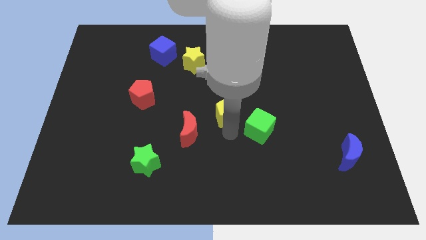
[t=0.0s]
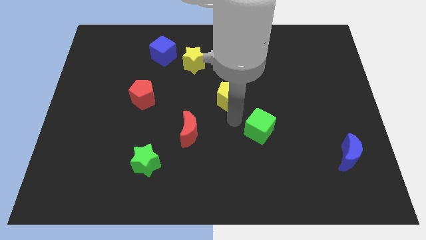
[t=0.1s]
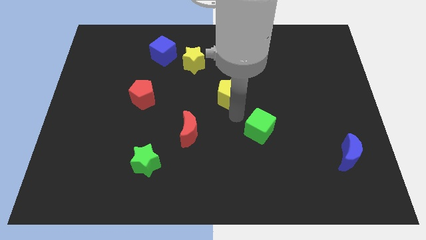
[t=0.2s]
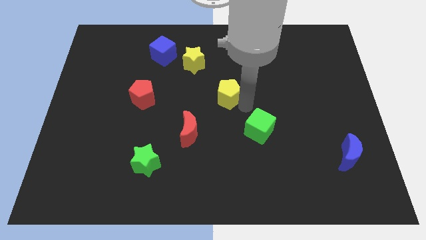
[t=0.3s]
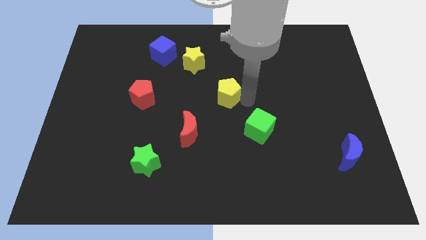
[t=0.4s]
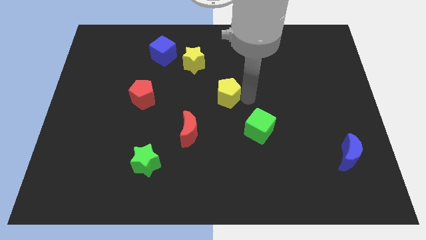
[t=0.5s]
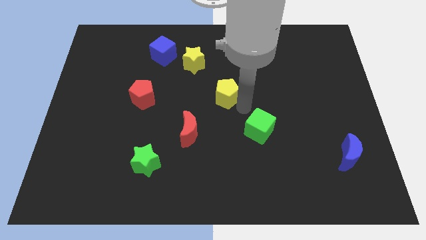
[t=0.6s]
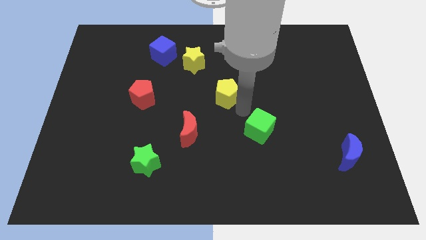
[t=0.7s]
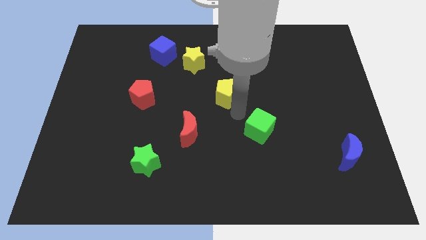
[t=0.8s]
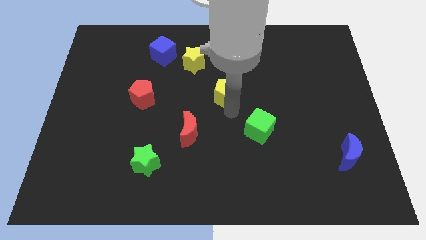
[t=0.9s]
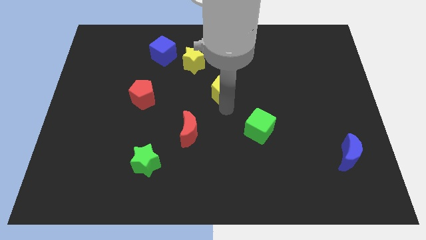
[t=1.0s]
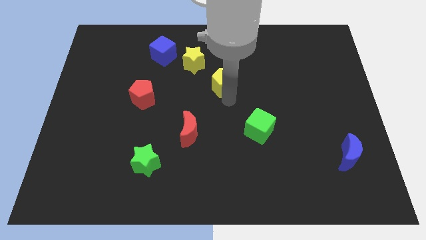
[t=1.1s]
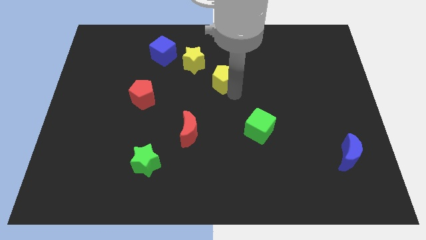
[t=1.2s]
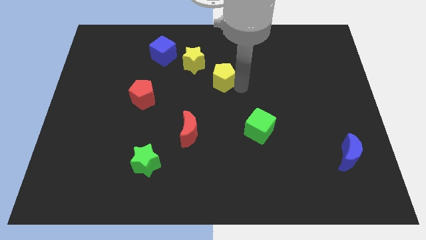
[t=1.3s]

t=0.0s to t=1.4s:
push yellow pentagon slightly upwards

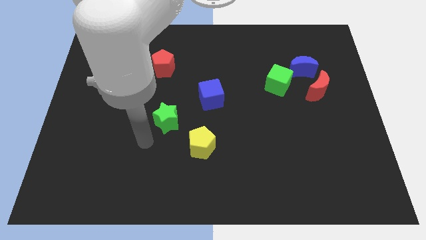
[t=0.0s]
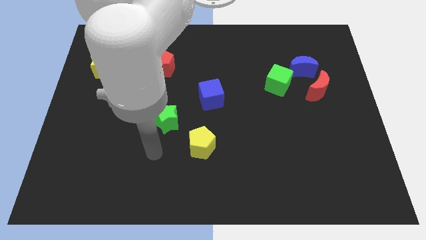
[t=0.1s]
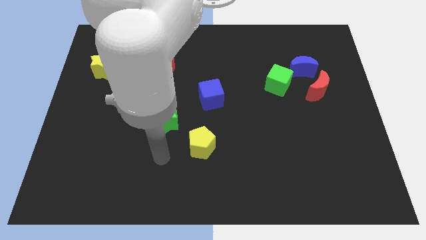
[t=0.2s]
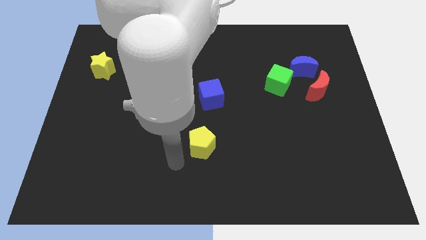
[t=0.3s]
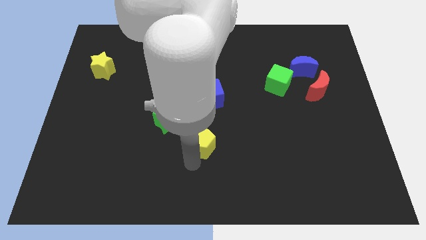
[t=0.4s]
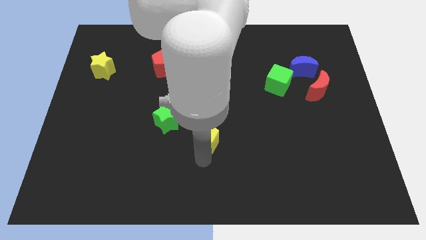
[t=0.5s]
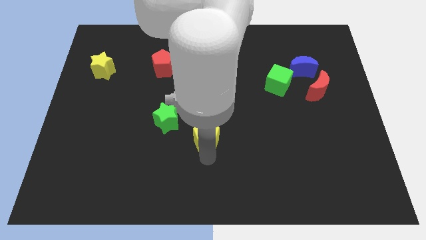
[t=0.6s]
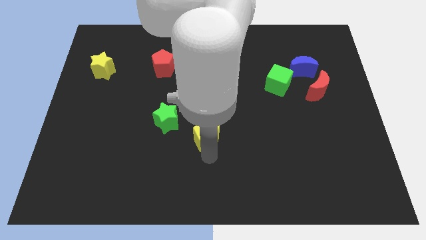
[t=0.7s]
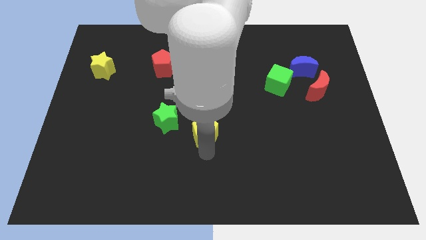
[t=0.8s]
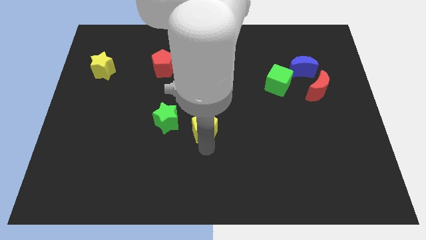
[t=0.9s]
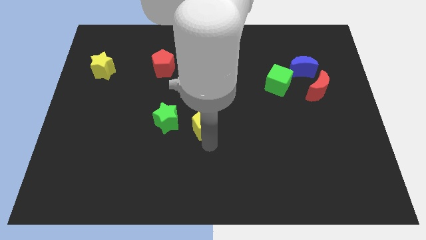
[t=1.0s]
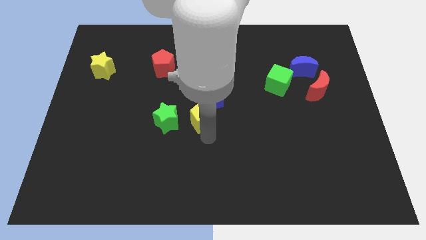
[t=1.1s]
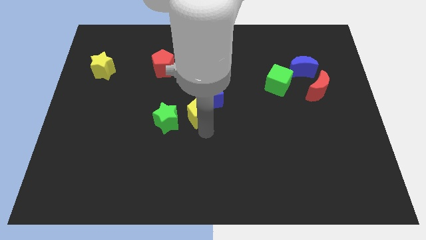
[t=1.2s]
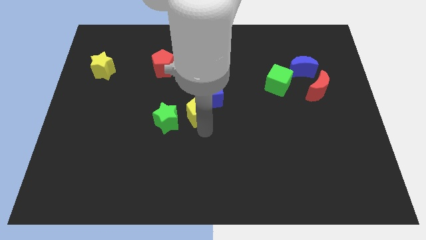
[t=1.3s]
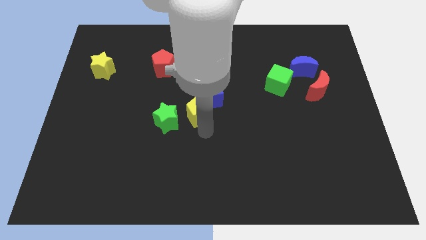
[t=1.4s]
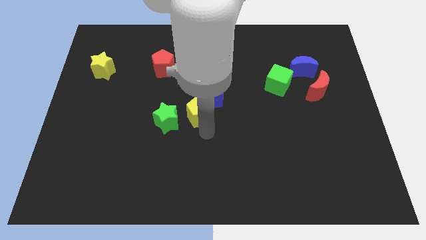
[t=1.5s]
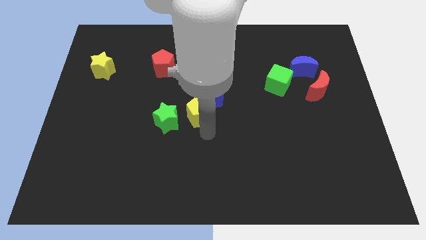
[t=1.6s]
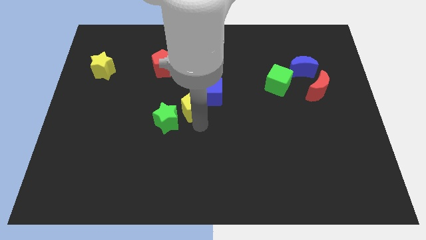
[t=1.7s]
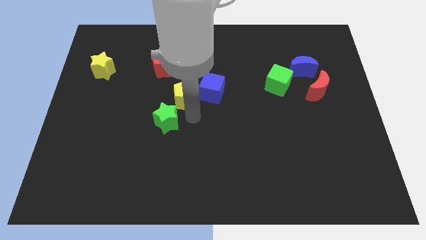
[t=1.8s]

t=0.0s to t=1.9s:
place the yellow pentagon in between blue cube and green star

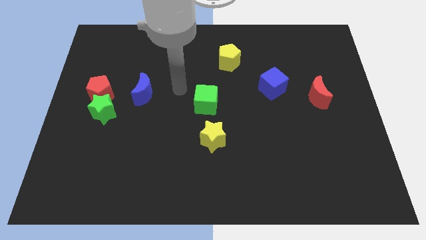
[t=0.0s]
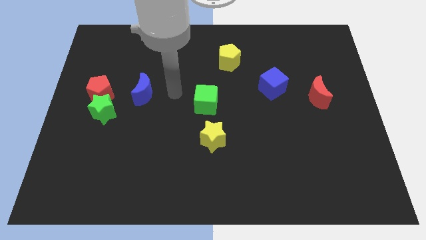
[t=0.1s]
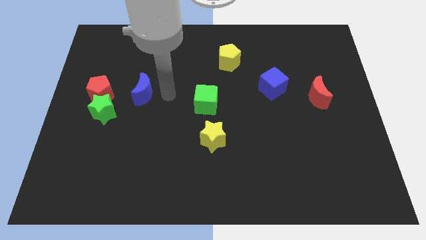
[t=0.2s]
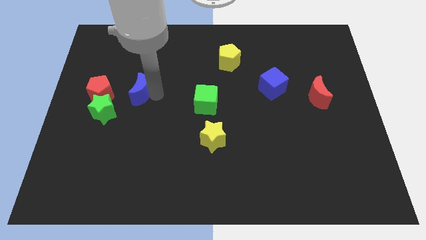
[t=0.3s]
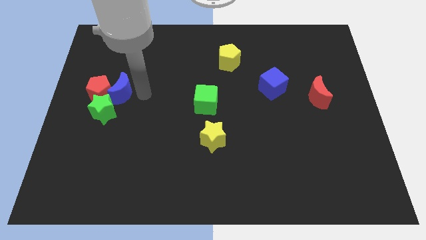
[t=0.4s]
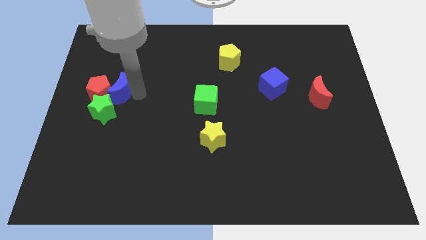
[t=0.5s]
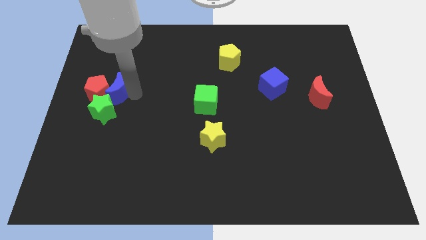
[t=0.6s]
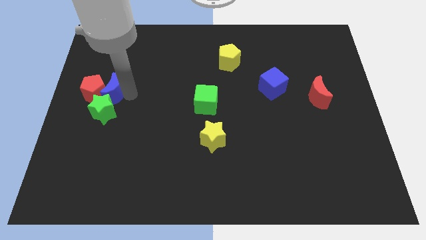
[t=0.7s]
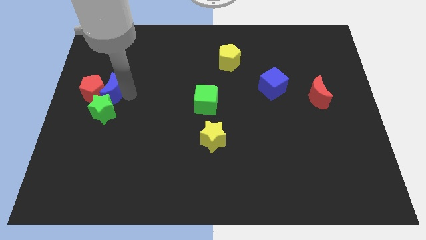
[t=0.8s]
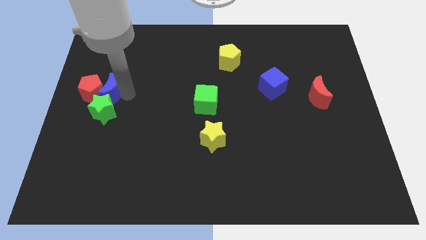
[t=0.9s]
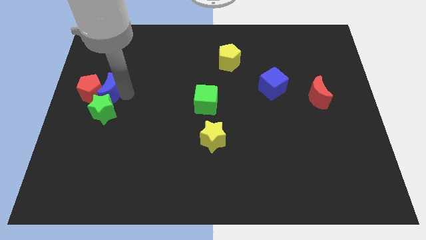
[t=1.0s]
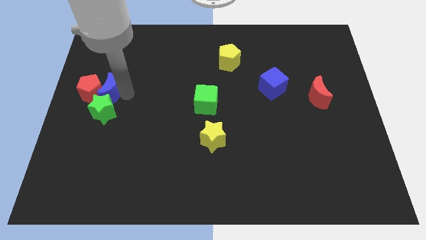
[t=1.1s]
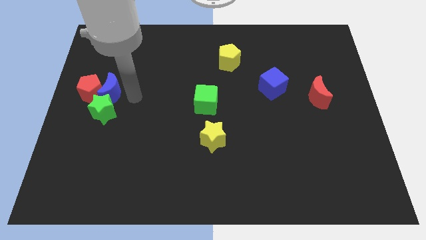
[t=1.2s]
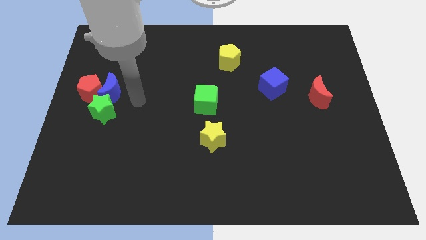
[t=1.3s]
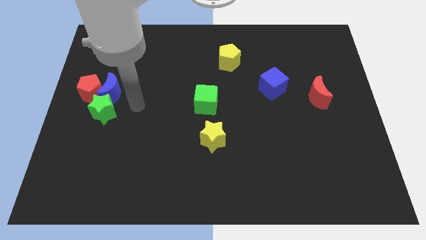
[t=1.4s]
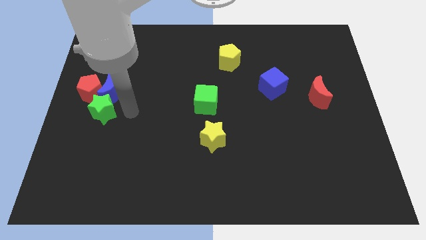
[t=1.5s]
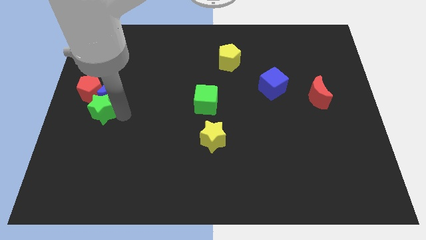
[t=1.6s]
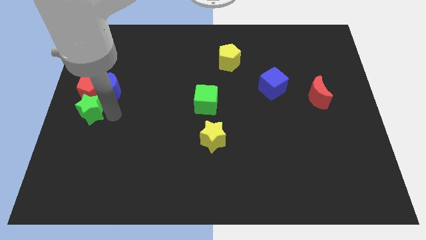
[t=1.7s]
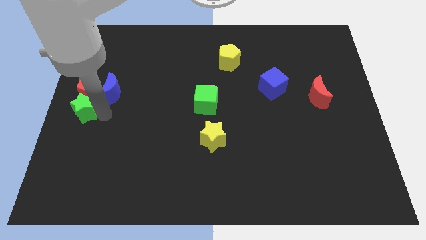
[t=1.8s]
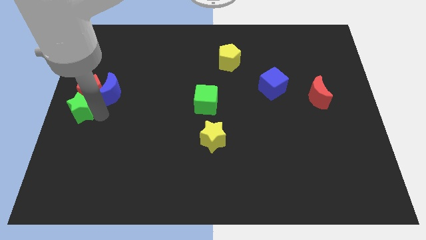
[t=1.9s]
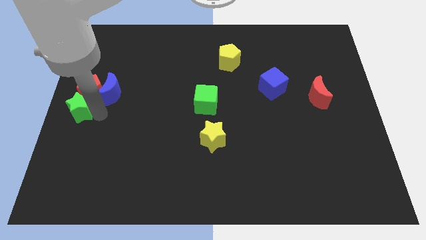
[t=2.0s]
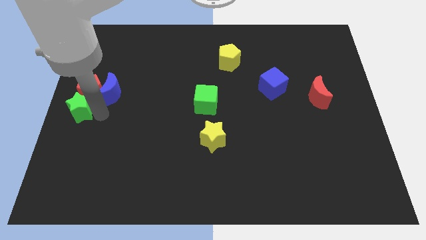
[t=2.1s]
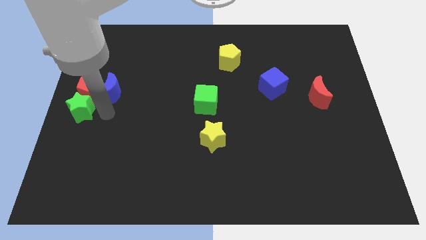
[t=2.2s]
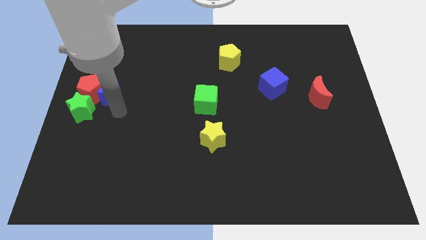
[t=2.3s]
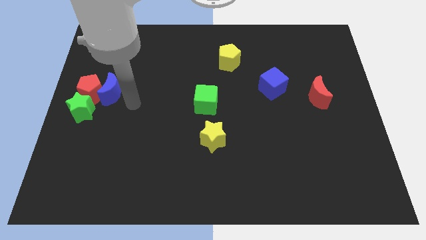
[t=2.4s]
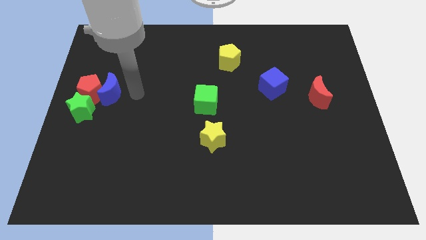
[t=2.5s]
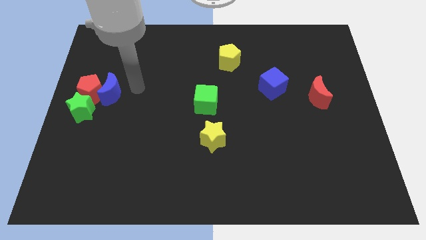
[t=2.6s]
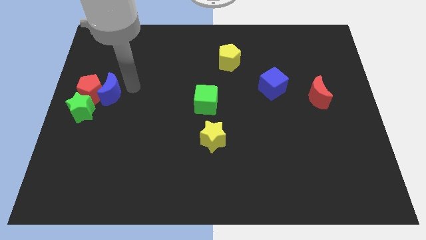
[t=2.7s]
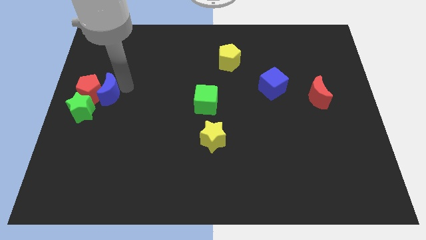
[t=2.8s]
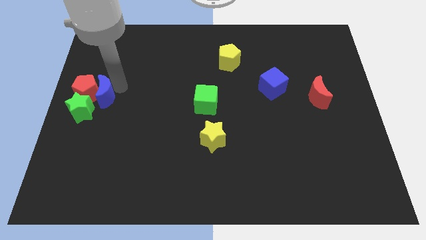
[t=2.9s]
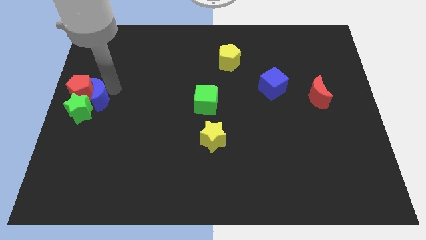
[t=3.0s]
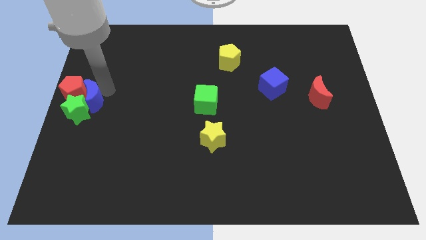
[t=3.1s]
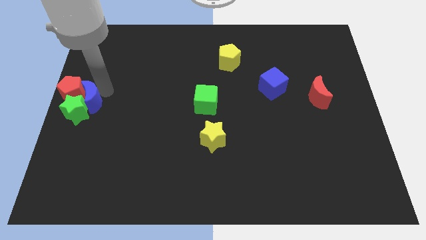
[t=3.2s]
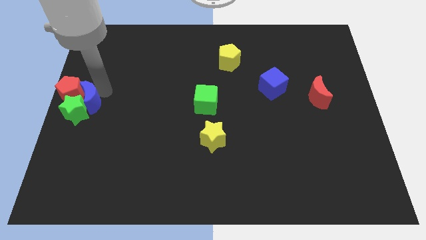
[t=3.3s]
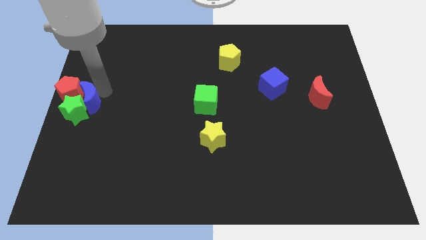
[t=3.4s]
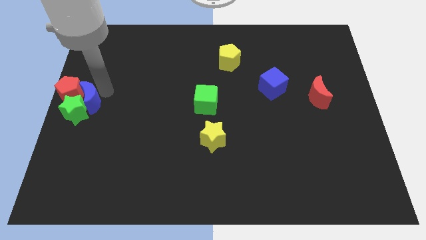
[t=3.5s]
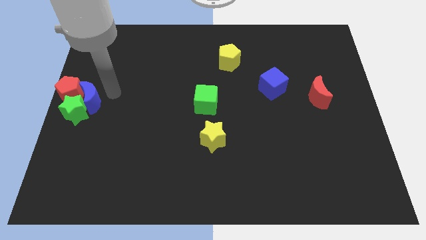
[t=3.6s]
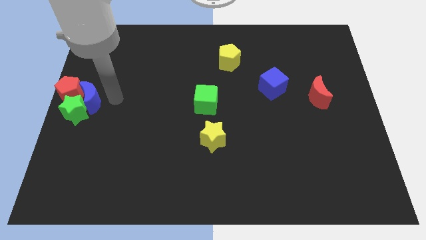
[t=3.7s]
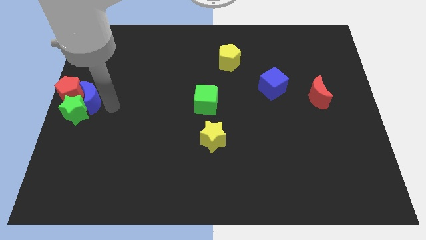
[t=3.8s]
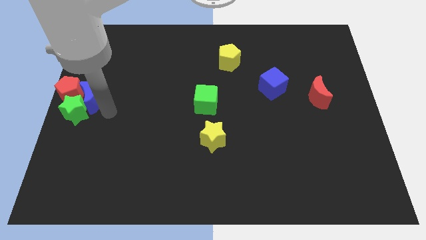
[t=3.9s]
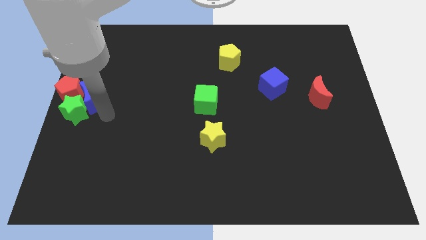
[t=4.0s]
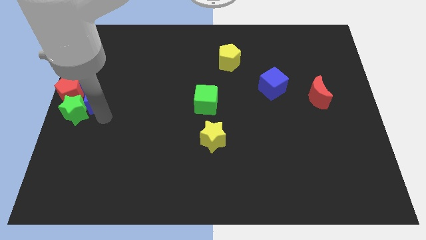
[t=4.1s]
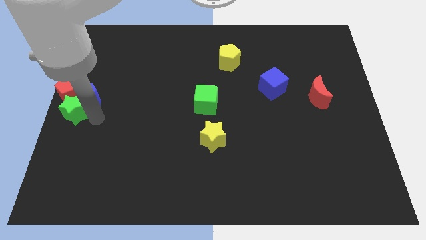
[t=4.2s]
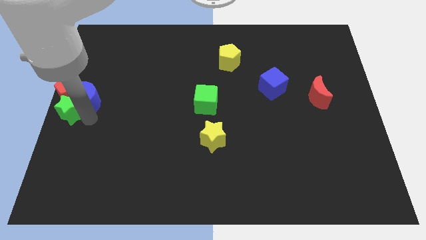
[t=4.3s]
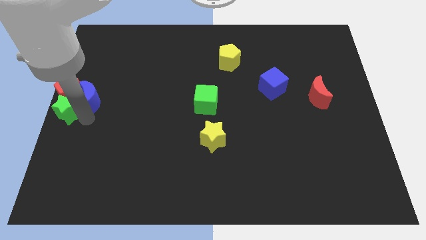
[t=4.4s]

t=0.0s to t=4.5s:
move the green star blue crescent and the red pentagon to the left center of the board

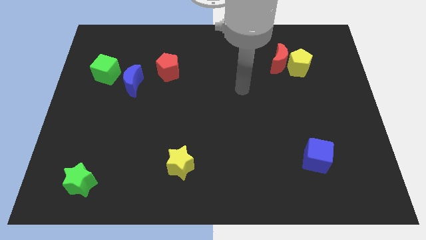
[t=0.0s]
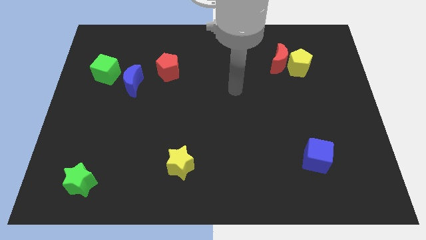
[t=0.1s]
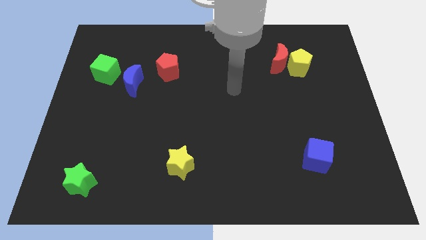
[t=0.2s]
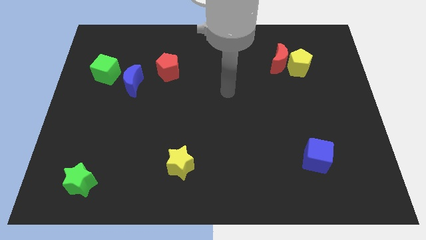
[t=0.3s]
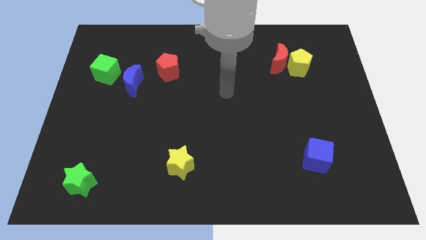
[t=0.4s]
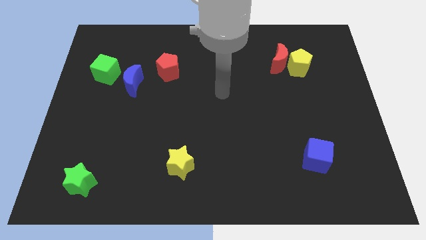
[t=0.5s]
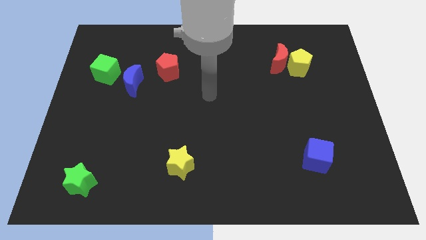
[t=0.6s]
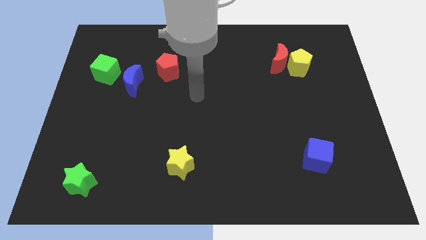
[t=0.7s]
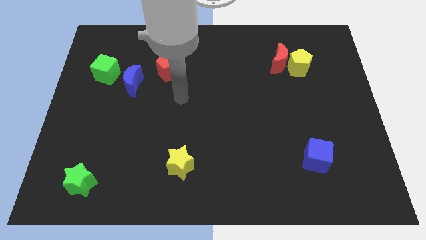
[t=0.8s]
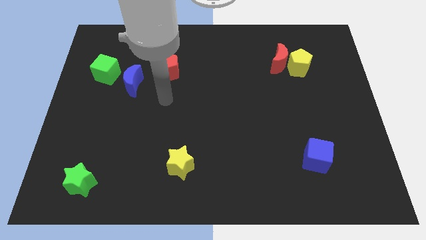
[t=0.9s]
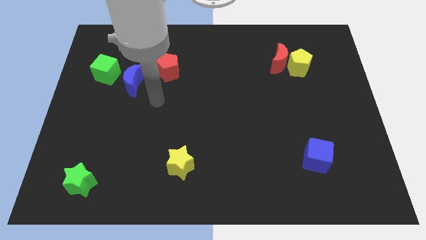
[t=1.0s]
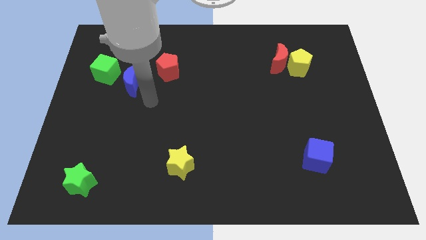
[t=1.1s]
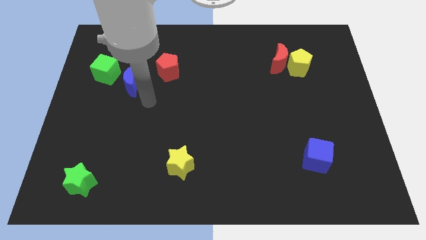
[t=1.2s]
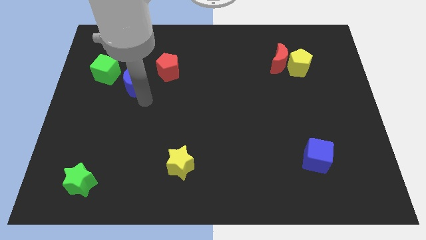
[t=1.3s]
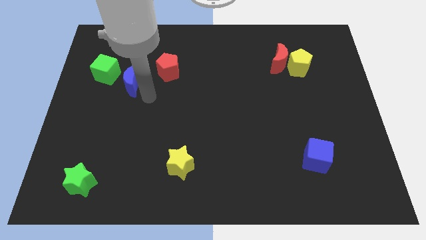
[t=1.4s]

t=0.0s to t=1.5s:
point your hand at the bottom right side of the blue moon
